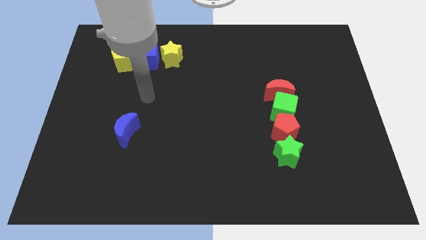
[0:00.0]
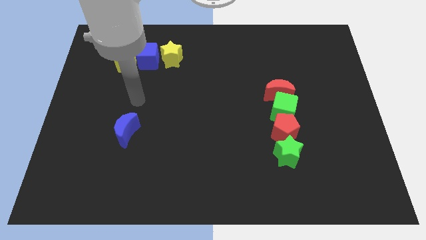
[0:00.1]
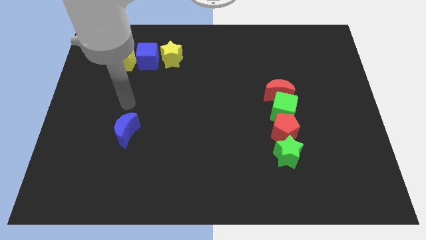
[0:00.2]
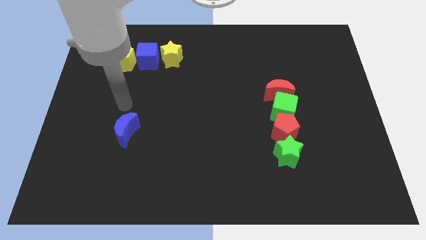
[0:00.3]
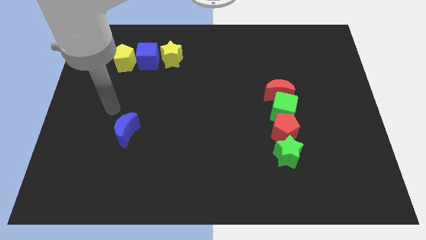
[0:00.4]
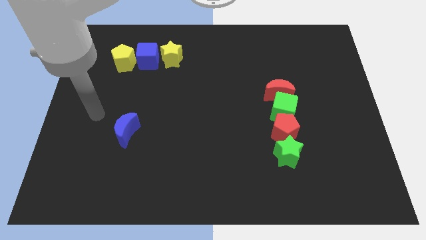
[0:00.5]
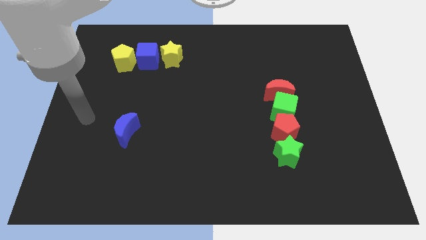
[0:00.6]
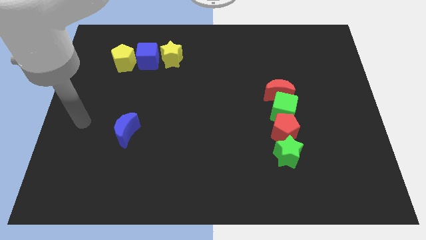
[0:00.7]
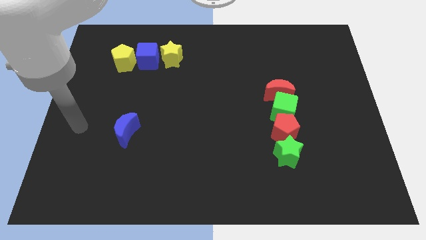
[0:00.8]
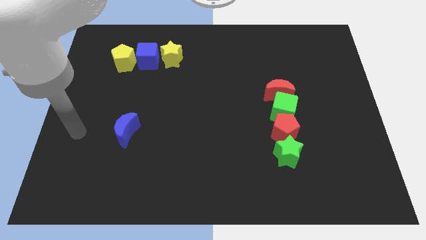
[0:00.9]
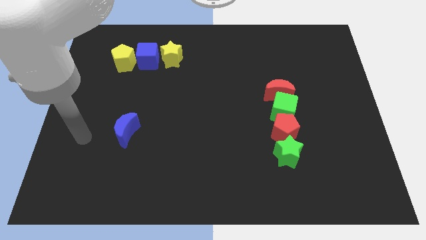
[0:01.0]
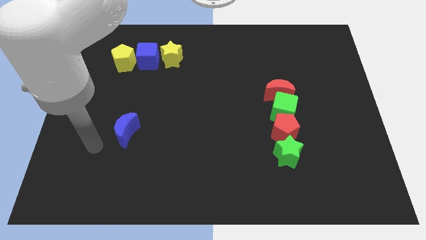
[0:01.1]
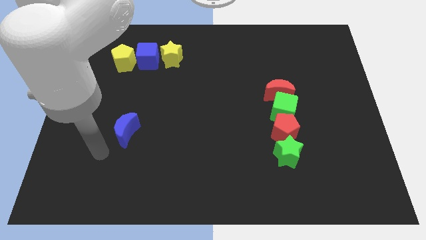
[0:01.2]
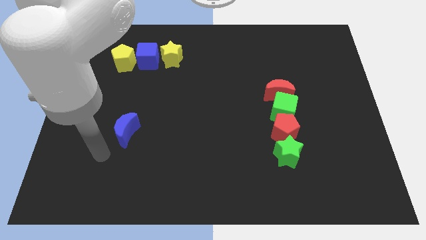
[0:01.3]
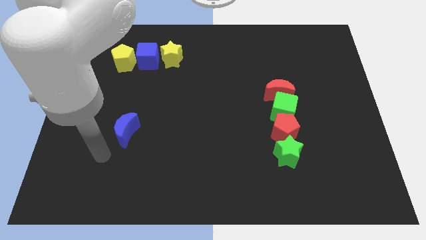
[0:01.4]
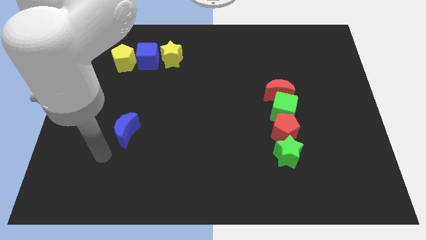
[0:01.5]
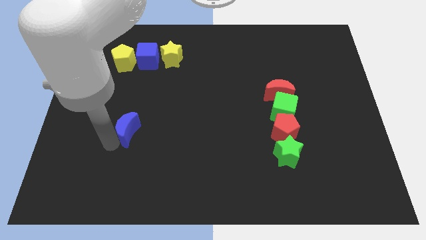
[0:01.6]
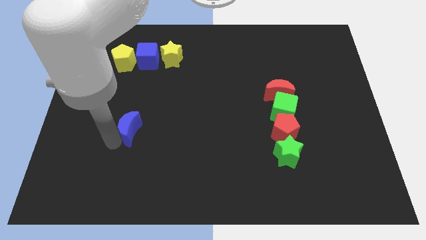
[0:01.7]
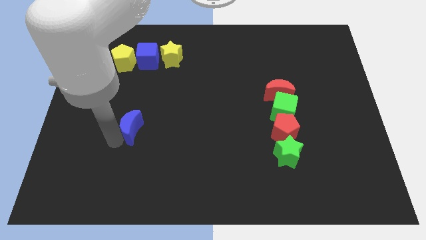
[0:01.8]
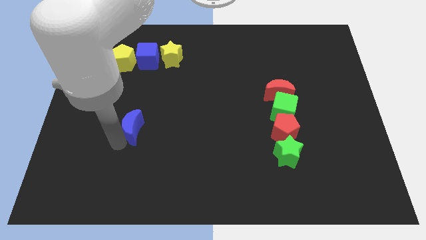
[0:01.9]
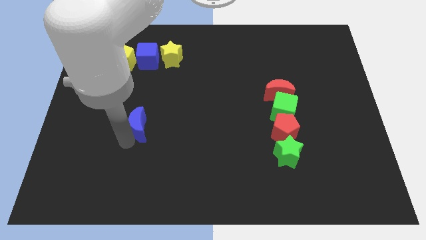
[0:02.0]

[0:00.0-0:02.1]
move the arm to the bottom of the blue crescent

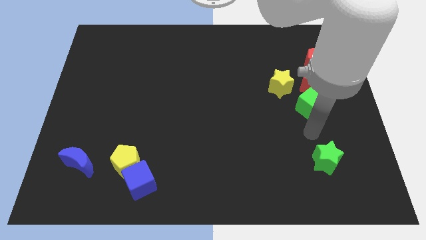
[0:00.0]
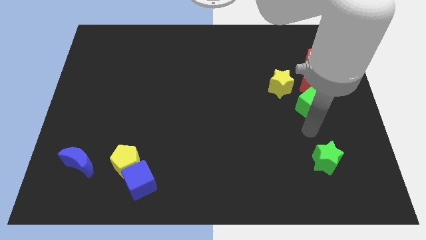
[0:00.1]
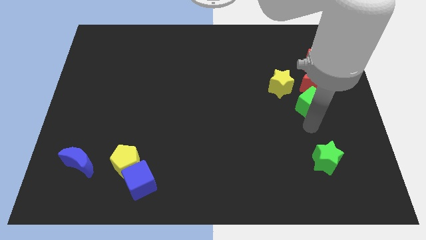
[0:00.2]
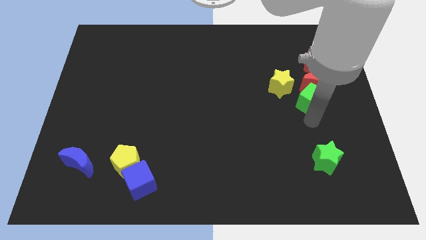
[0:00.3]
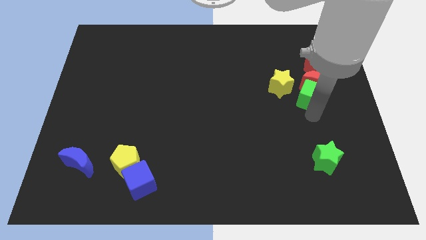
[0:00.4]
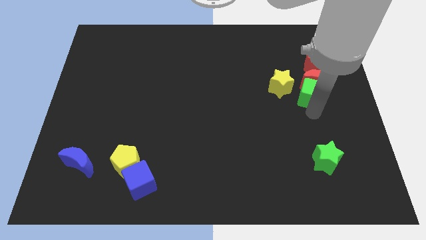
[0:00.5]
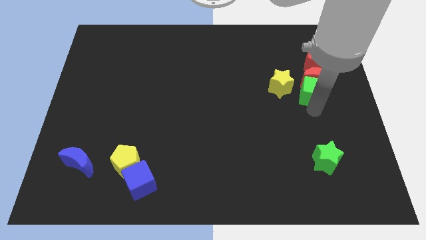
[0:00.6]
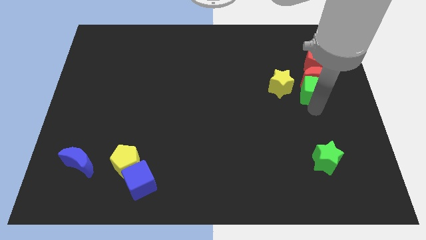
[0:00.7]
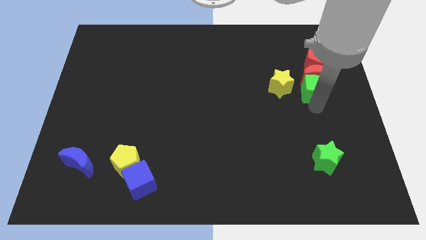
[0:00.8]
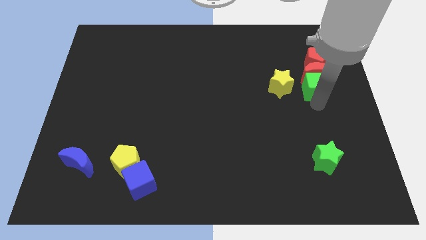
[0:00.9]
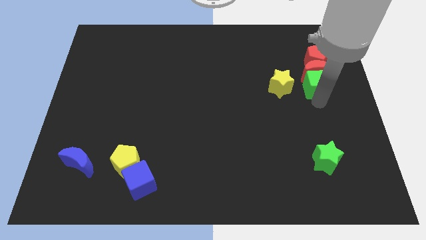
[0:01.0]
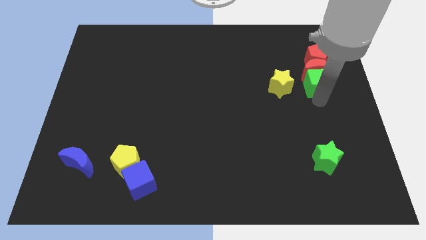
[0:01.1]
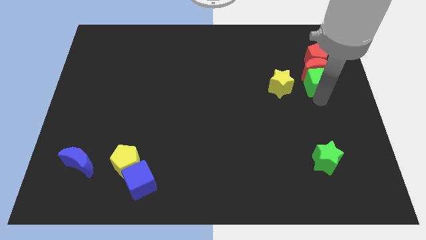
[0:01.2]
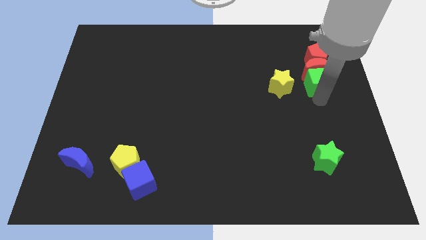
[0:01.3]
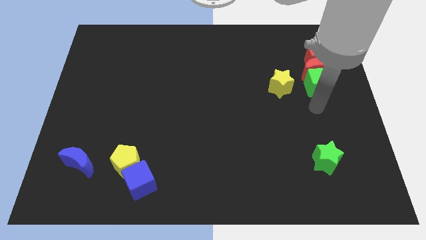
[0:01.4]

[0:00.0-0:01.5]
push the green cube and red moon into the red pentagon
